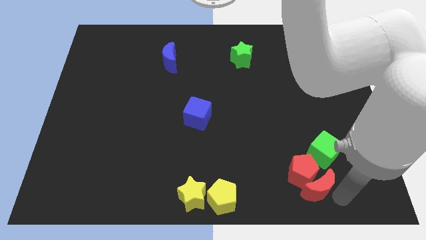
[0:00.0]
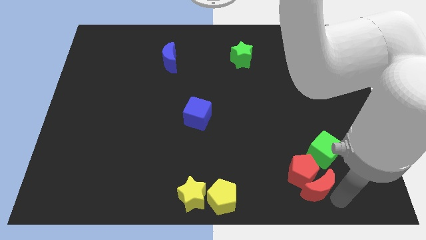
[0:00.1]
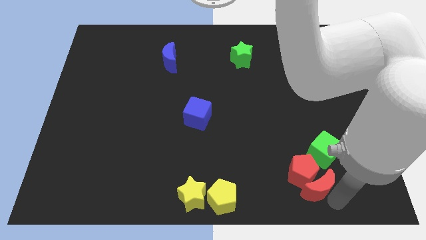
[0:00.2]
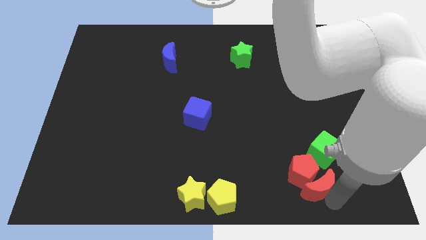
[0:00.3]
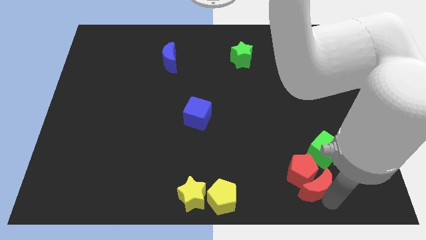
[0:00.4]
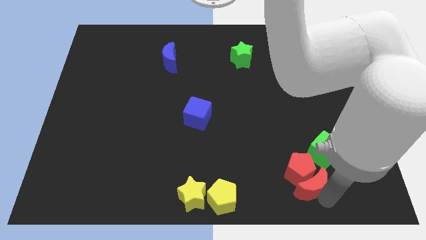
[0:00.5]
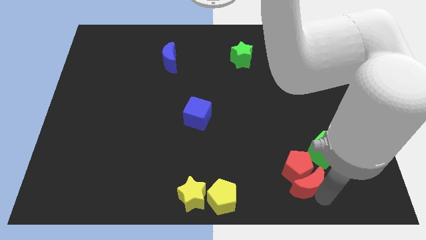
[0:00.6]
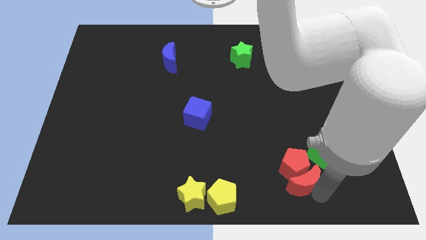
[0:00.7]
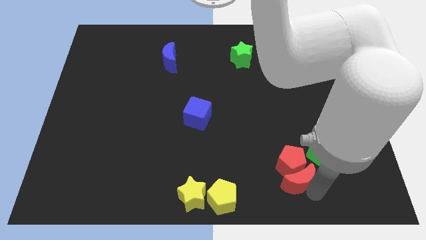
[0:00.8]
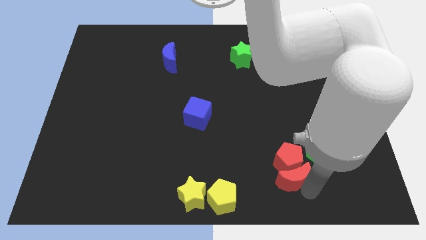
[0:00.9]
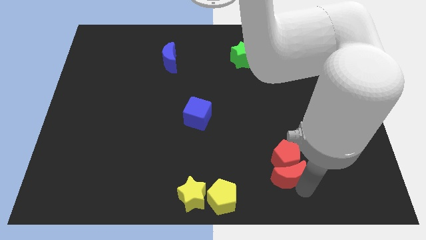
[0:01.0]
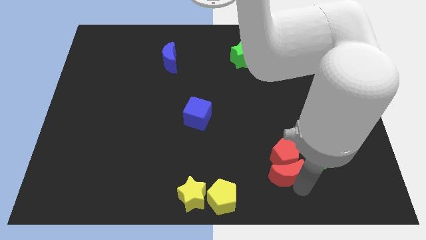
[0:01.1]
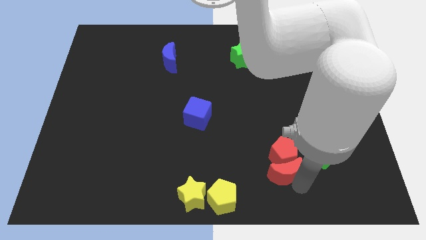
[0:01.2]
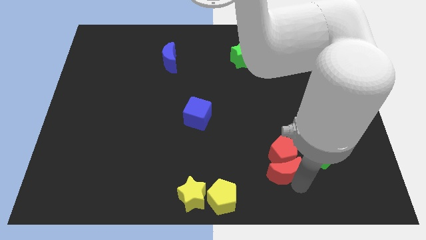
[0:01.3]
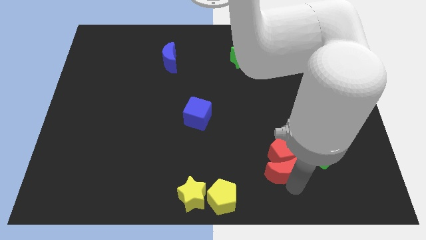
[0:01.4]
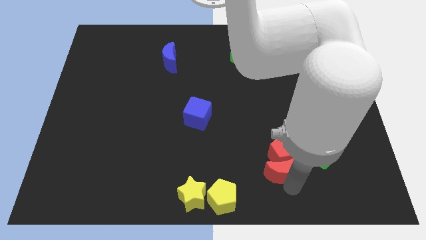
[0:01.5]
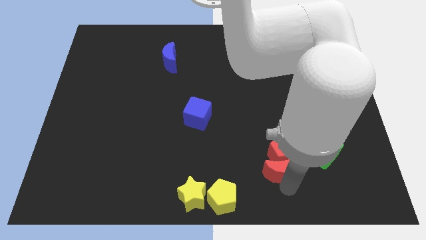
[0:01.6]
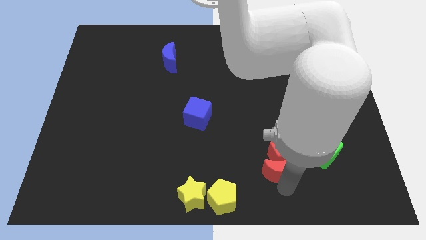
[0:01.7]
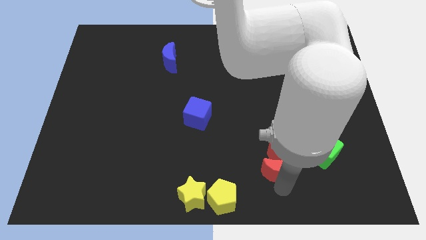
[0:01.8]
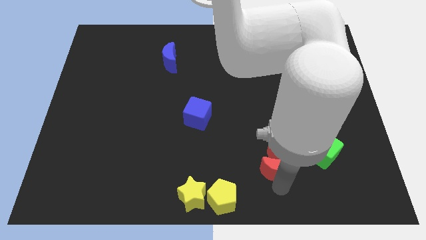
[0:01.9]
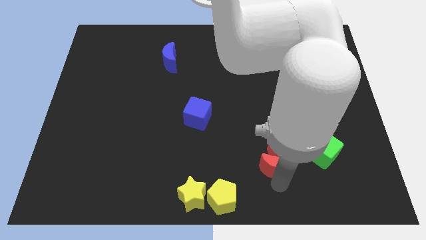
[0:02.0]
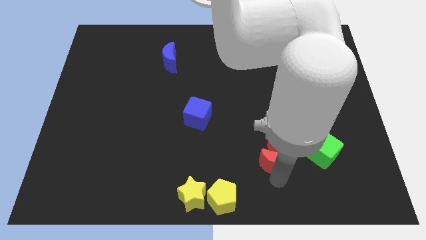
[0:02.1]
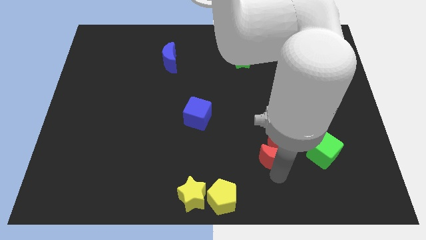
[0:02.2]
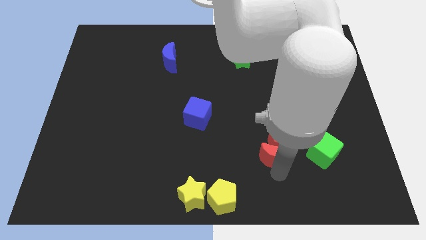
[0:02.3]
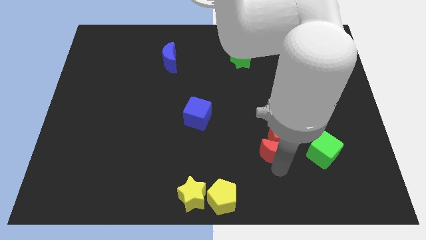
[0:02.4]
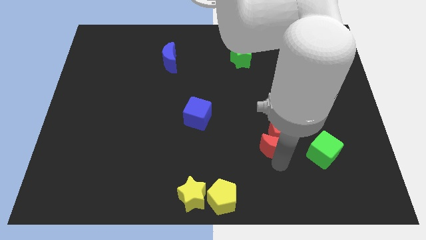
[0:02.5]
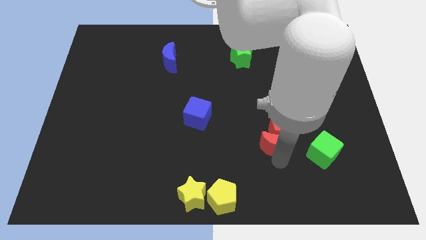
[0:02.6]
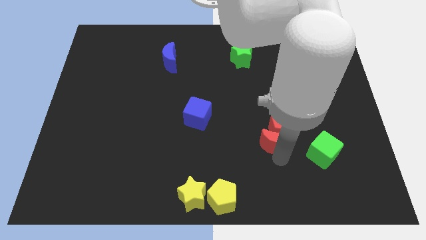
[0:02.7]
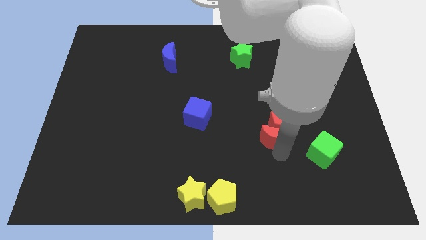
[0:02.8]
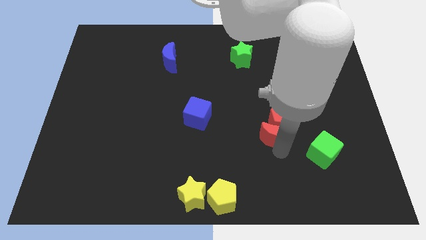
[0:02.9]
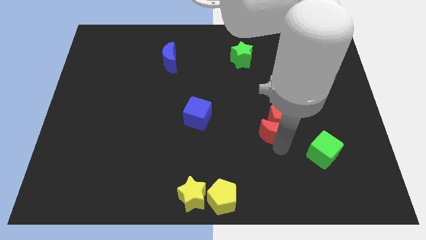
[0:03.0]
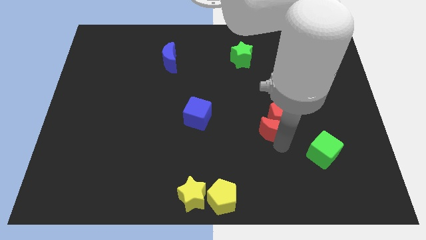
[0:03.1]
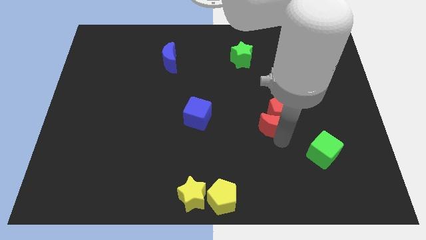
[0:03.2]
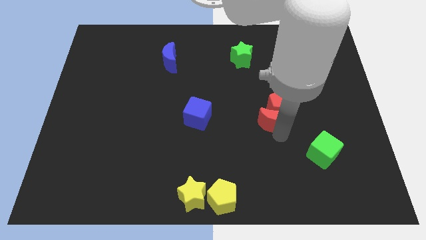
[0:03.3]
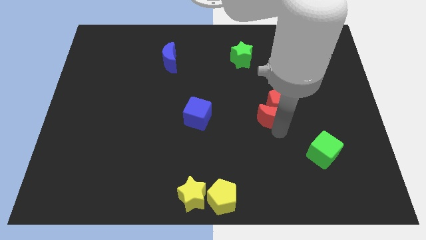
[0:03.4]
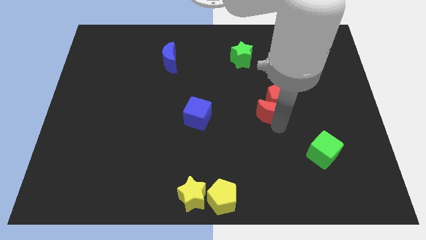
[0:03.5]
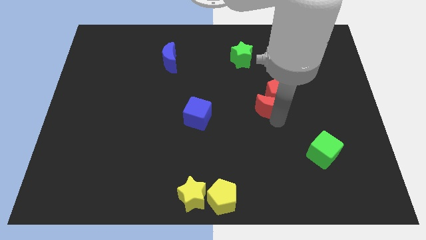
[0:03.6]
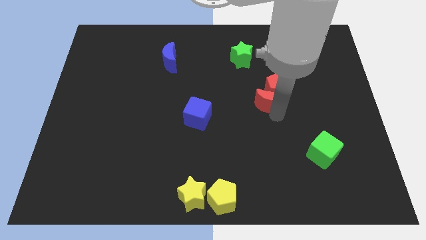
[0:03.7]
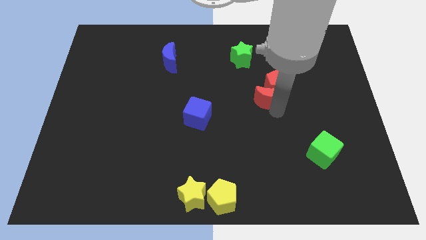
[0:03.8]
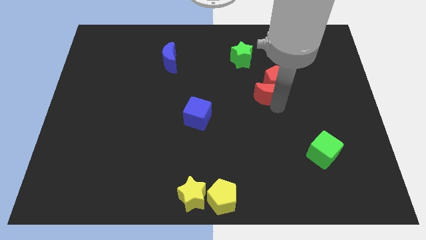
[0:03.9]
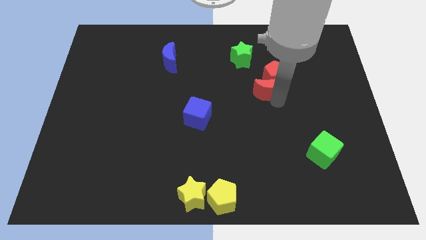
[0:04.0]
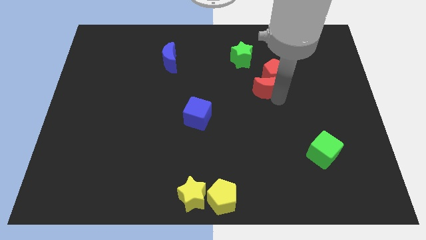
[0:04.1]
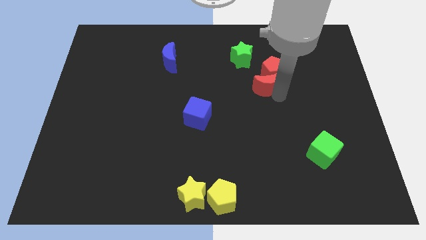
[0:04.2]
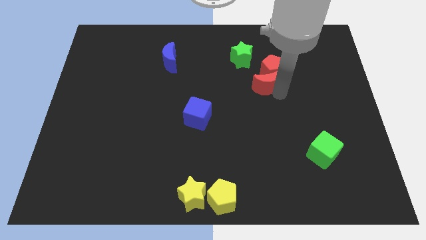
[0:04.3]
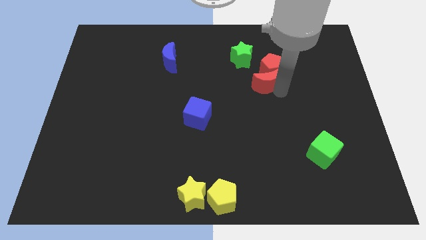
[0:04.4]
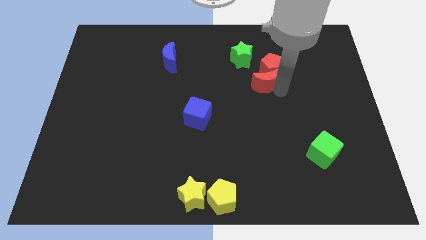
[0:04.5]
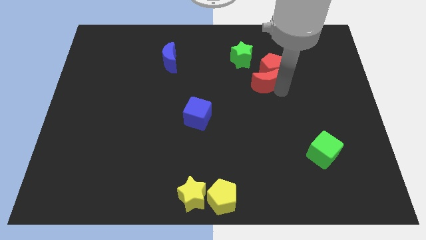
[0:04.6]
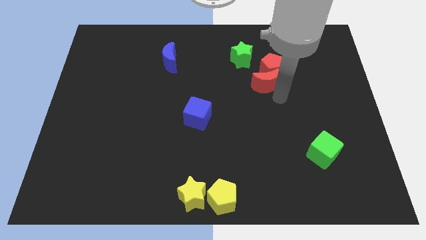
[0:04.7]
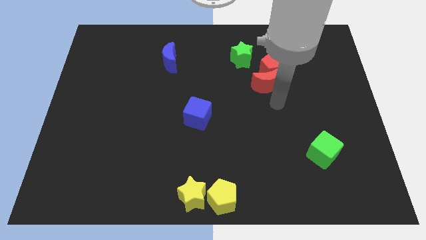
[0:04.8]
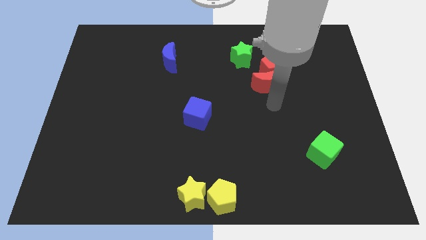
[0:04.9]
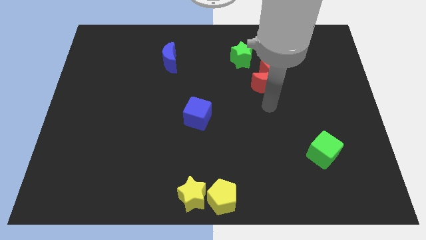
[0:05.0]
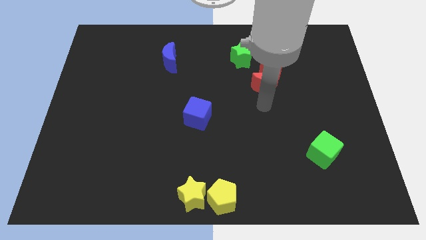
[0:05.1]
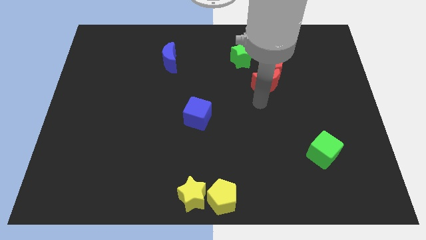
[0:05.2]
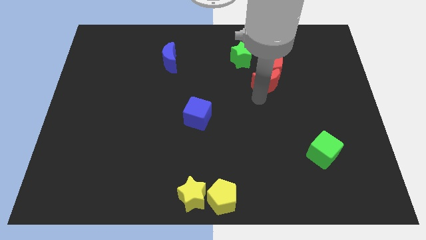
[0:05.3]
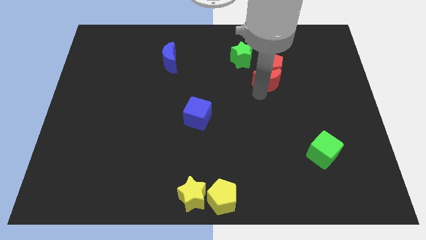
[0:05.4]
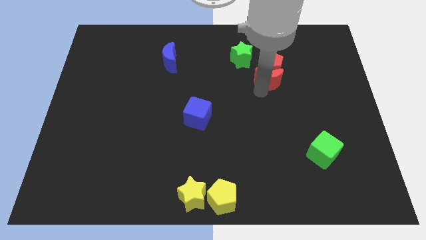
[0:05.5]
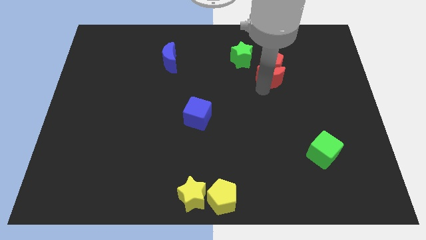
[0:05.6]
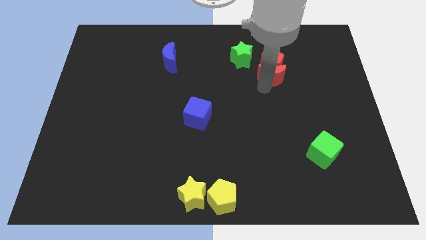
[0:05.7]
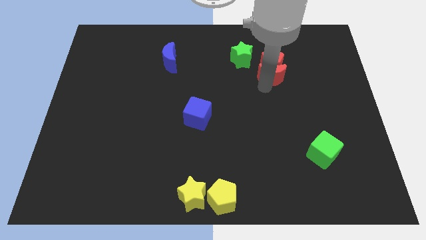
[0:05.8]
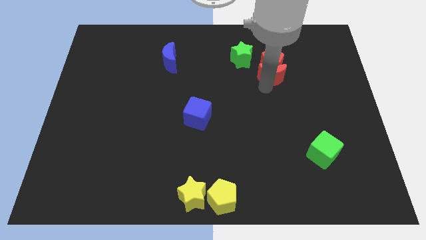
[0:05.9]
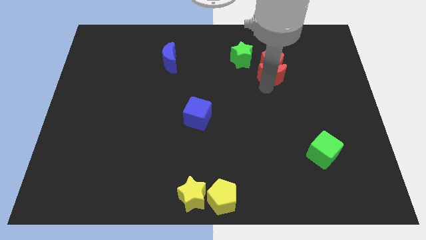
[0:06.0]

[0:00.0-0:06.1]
push the red crescent along the red pentagon right to the green star

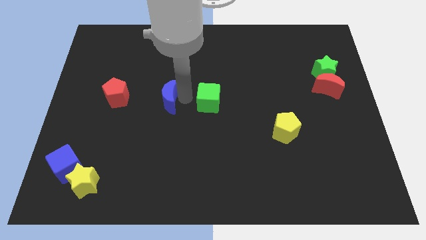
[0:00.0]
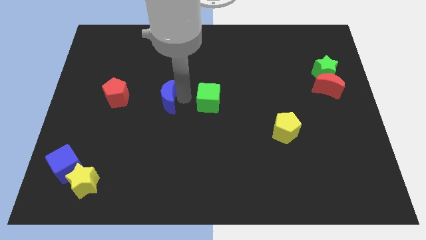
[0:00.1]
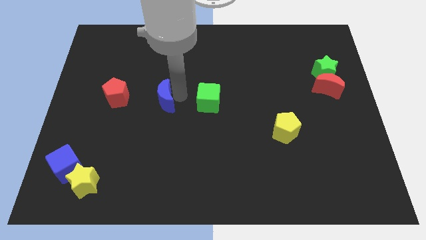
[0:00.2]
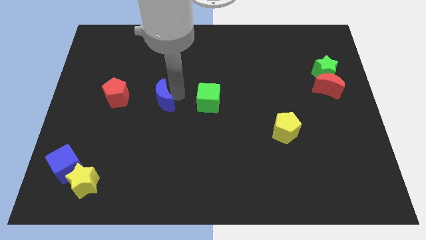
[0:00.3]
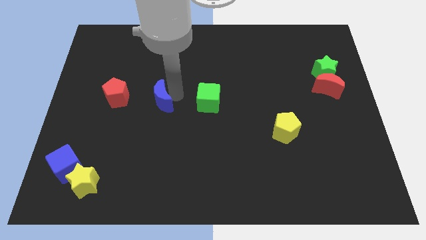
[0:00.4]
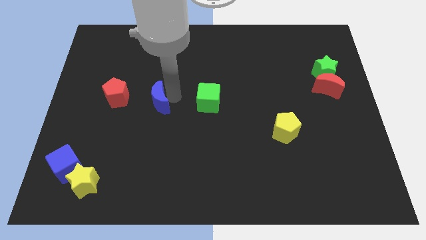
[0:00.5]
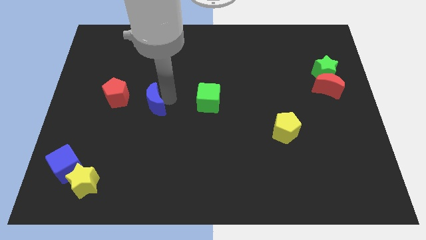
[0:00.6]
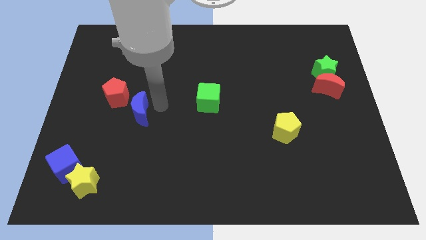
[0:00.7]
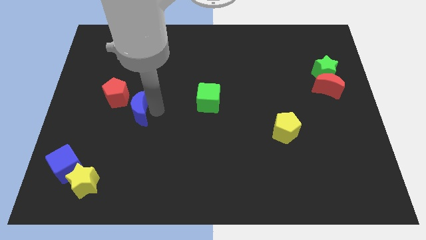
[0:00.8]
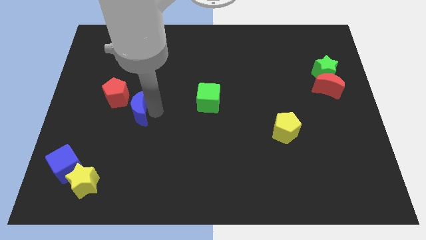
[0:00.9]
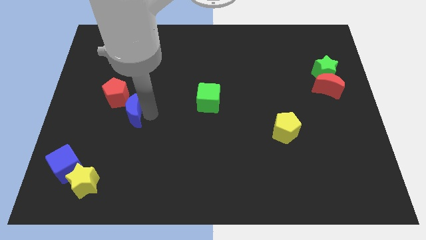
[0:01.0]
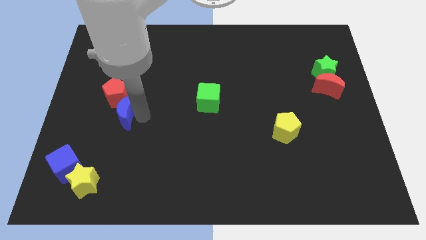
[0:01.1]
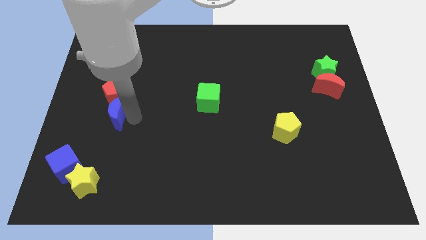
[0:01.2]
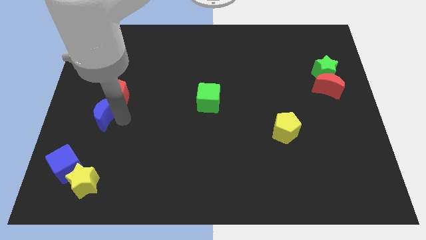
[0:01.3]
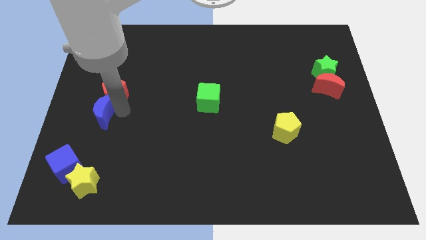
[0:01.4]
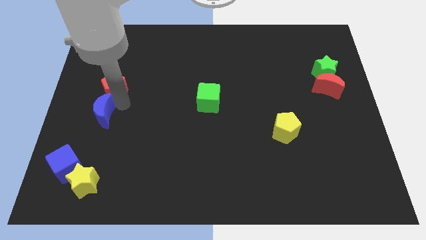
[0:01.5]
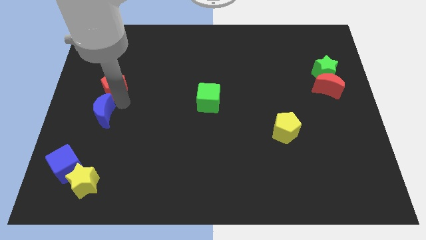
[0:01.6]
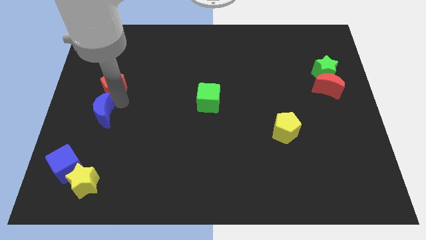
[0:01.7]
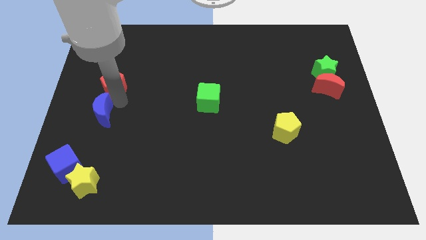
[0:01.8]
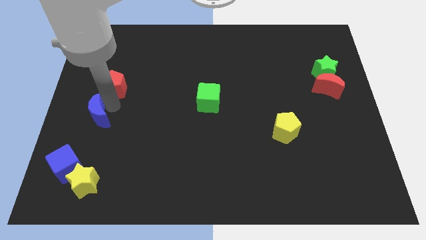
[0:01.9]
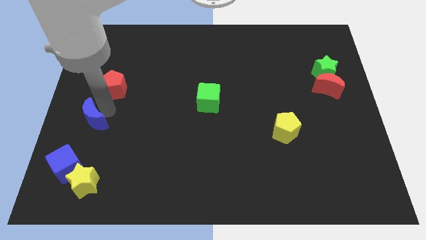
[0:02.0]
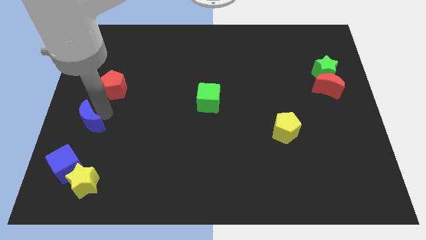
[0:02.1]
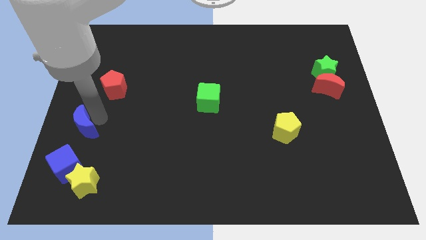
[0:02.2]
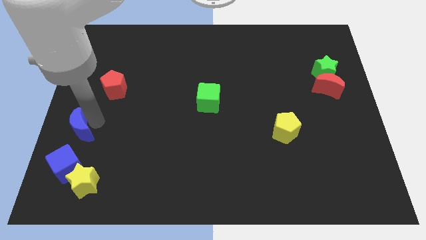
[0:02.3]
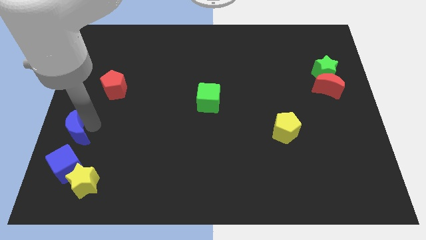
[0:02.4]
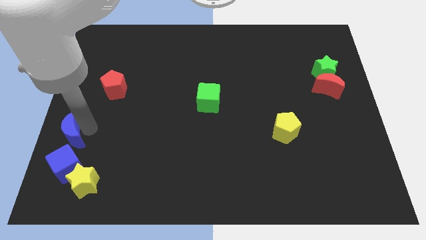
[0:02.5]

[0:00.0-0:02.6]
move the blue moon above the blue square

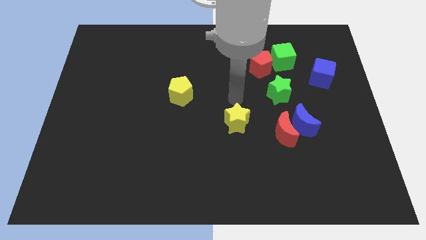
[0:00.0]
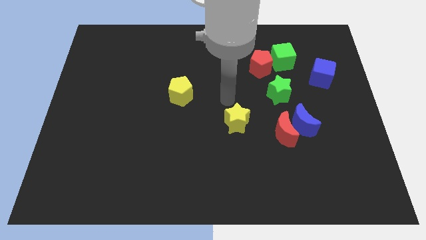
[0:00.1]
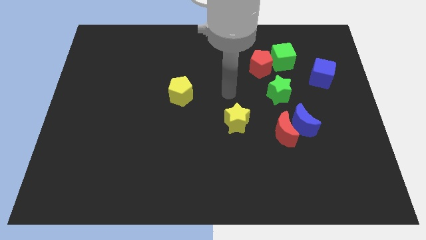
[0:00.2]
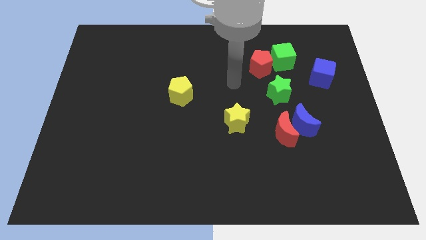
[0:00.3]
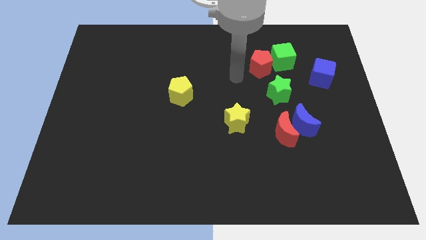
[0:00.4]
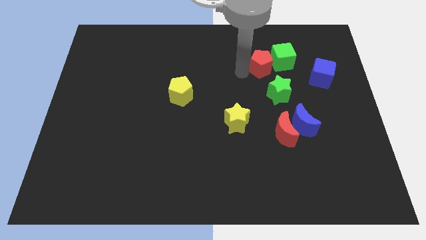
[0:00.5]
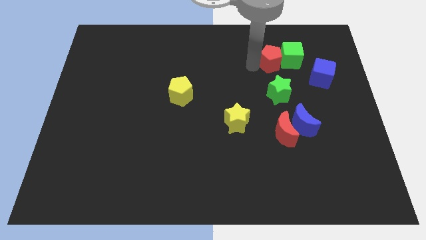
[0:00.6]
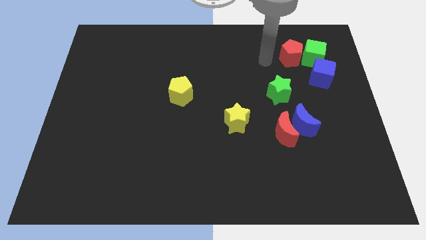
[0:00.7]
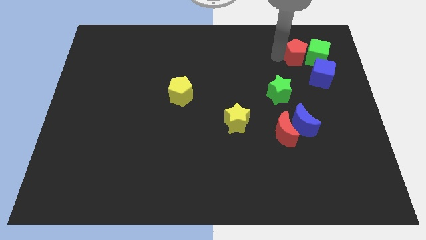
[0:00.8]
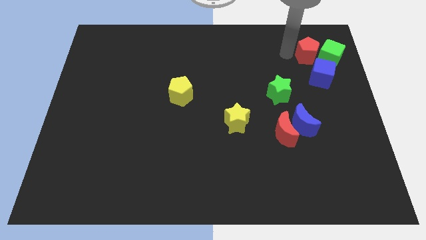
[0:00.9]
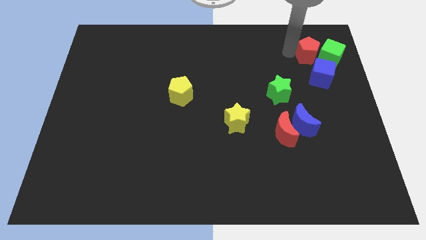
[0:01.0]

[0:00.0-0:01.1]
slide red pentagon along with green cube on top of blue cube
